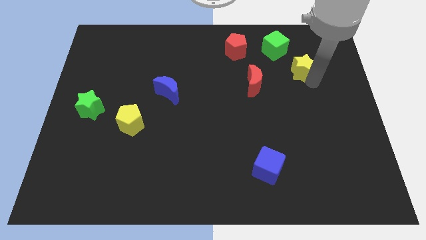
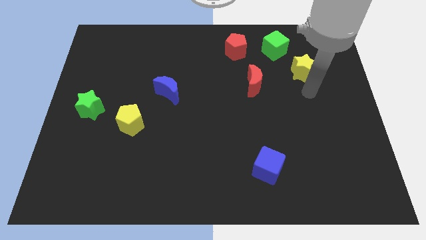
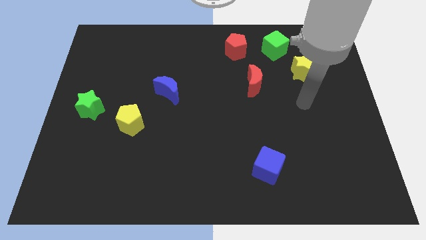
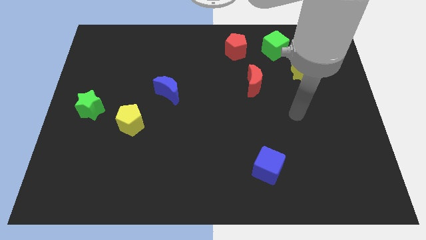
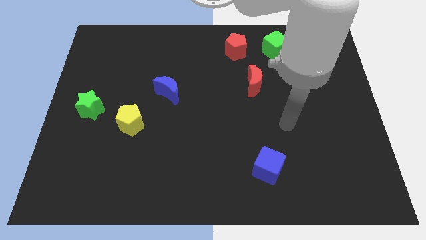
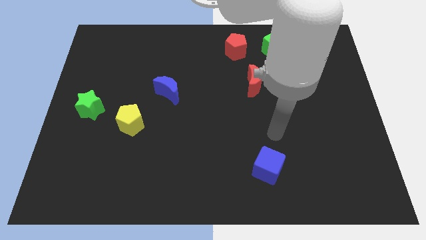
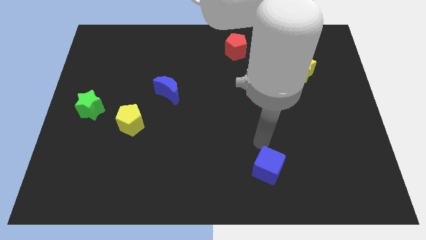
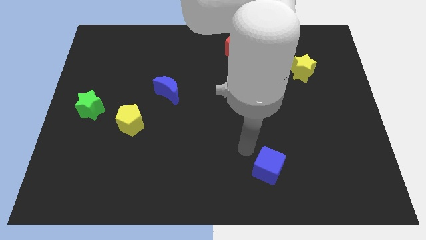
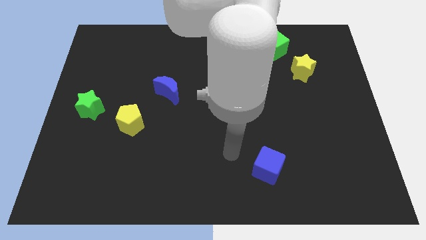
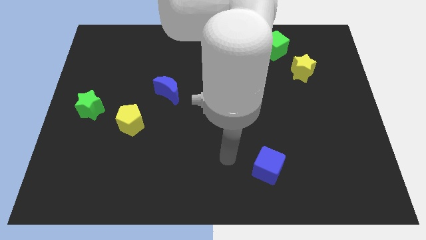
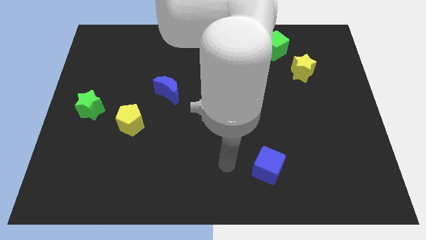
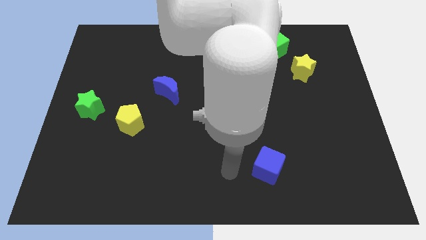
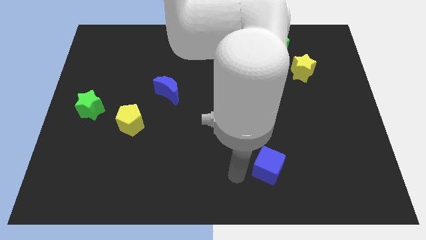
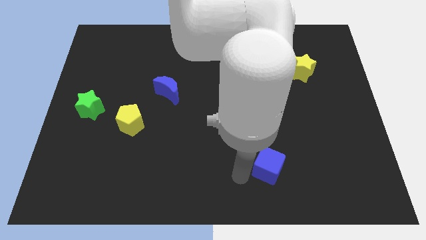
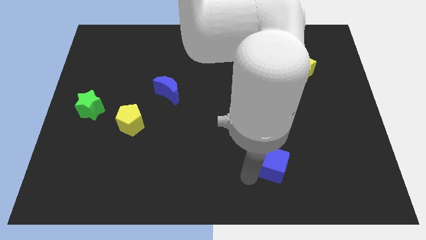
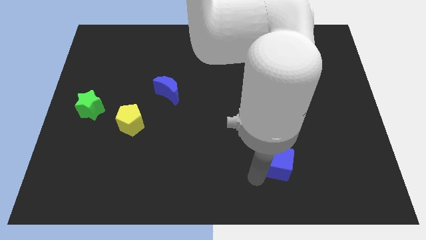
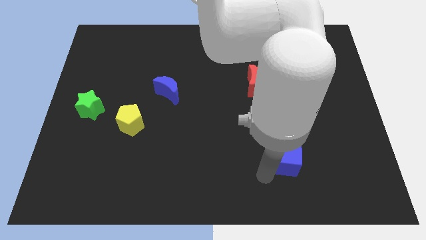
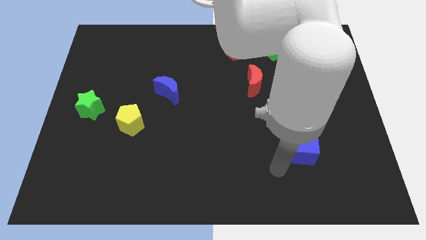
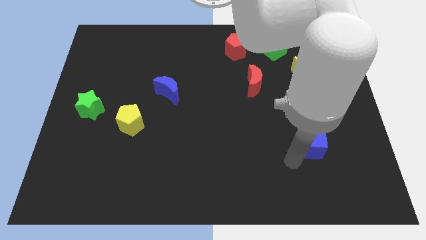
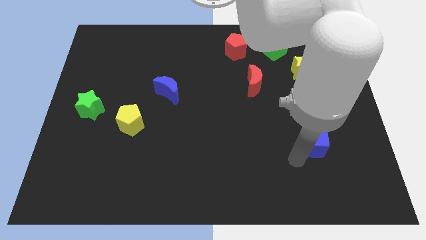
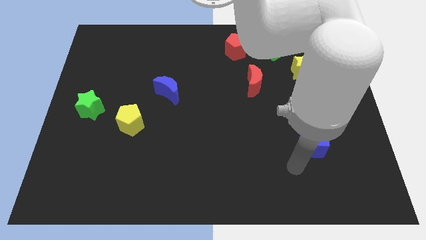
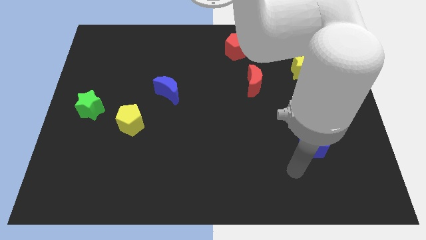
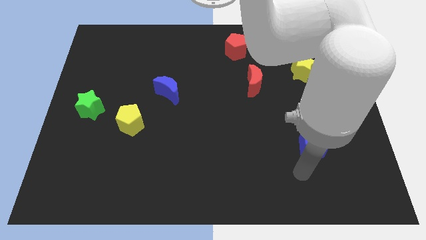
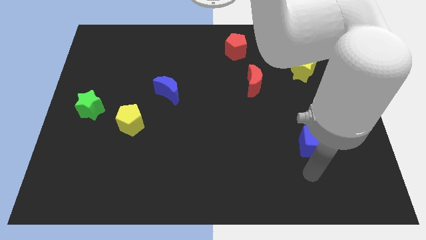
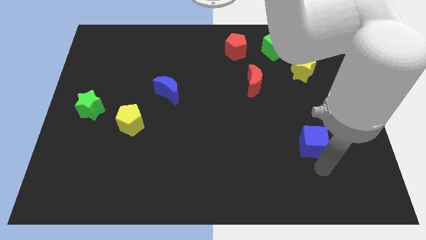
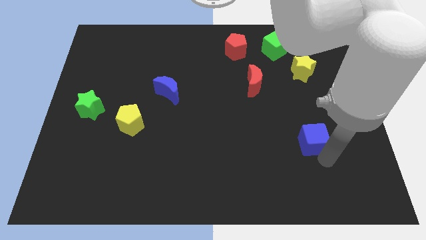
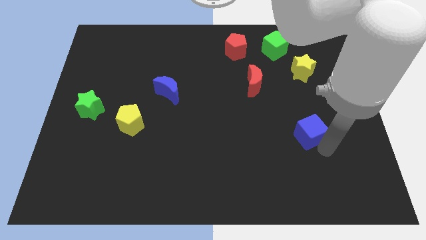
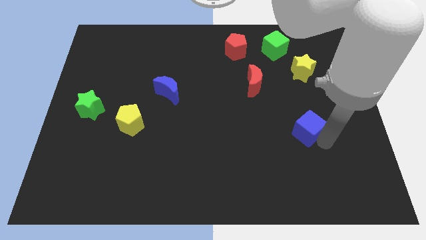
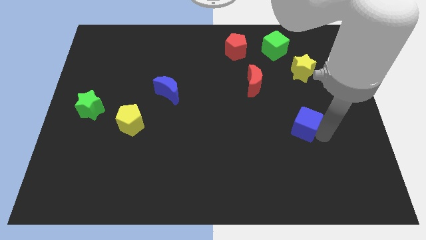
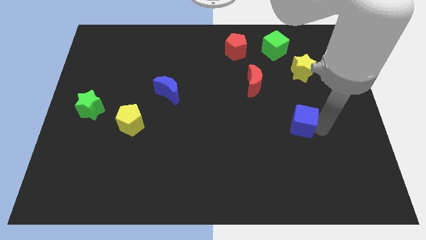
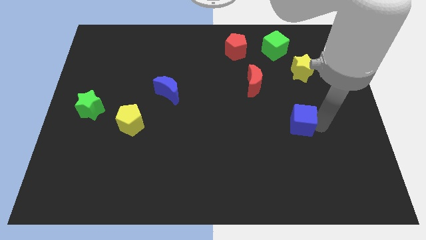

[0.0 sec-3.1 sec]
move the blue cube to the bottom of the yellow star

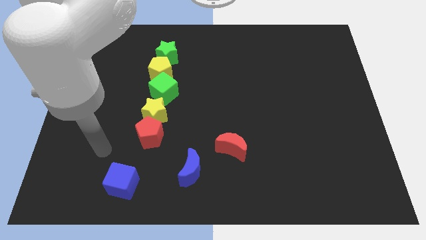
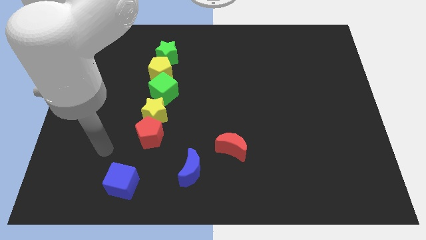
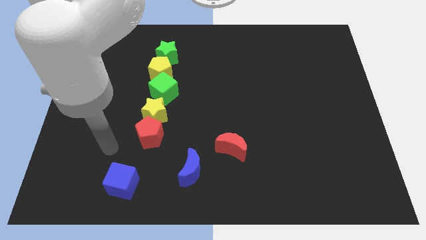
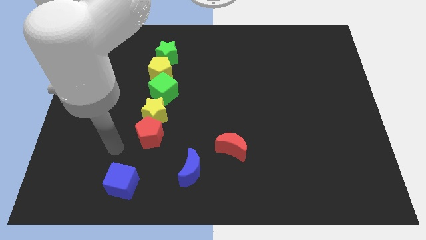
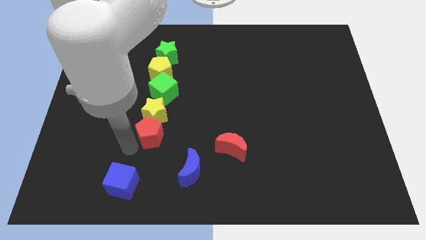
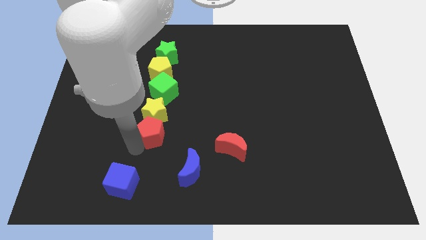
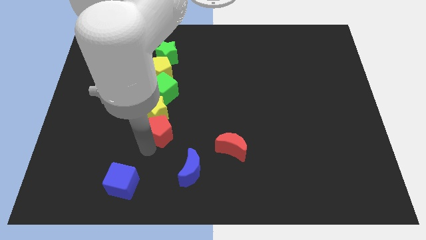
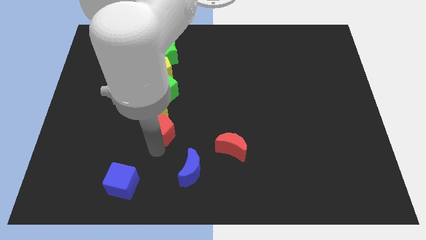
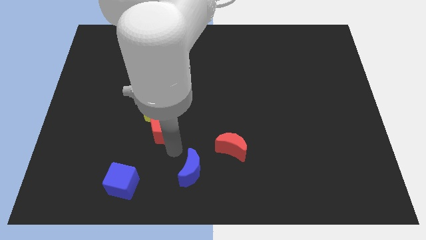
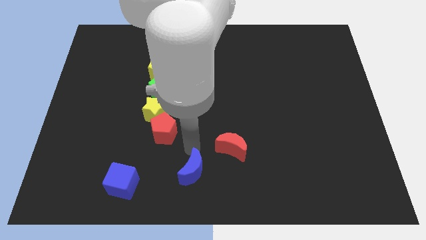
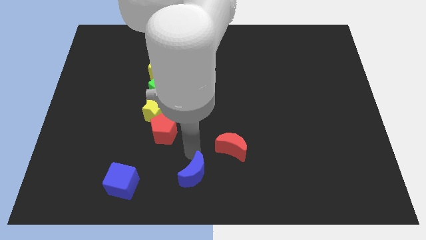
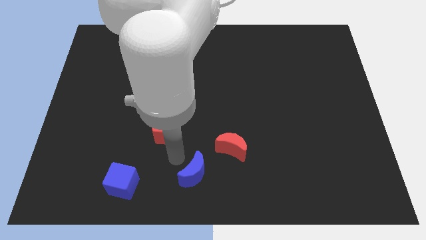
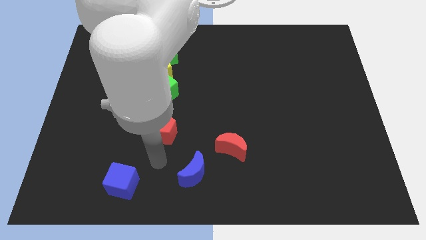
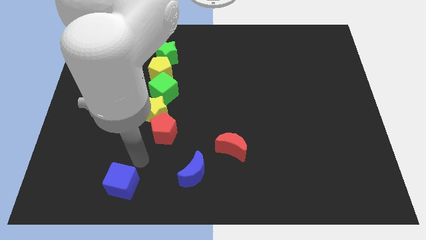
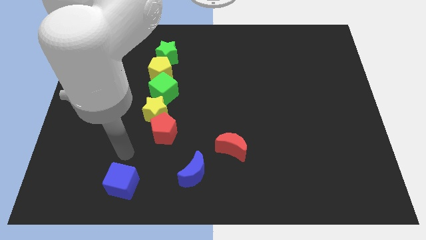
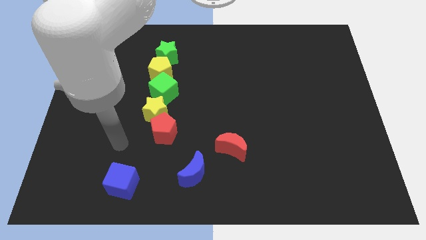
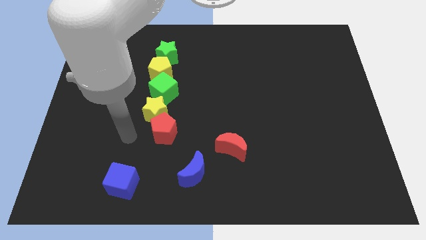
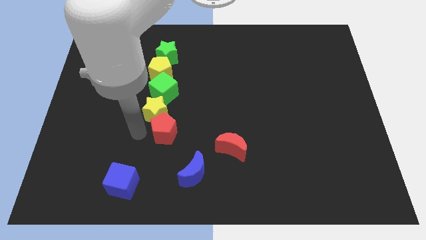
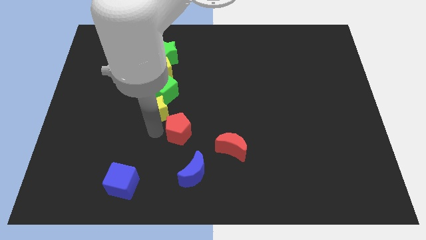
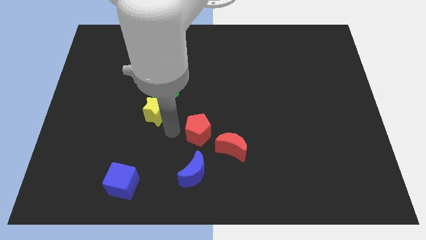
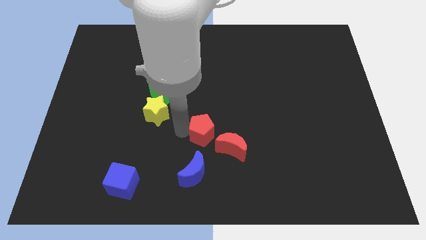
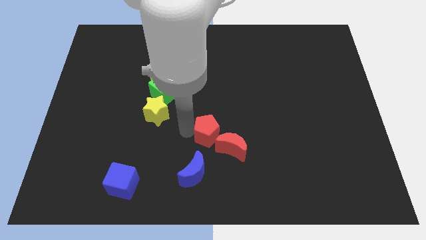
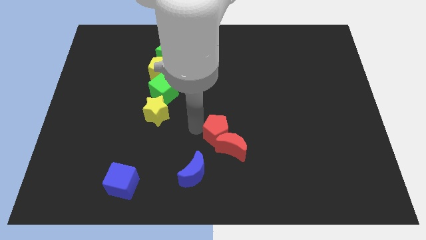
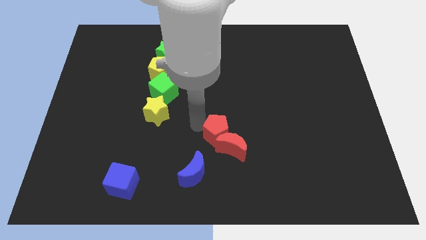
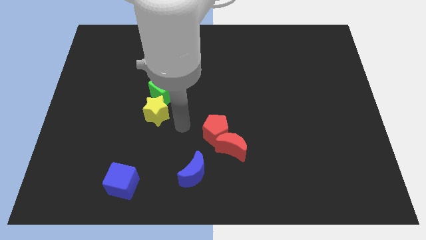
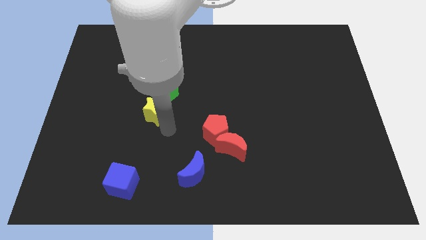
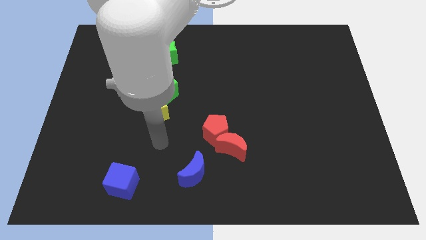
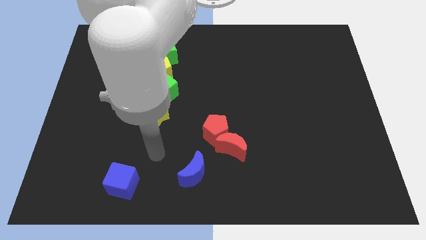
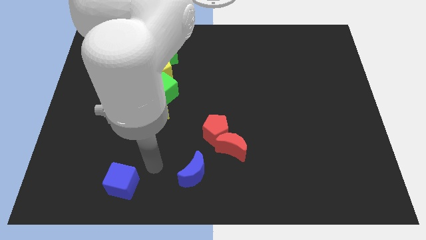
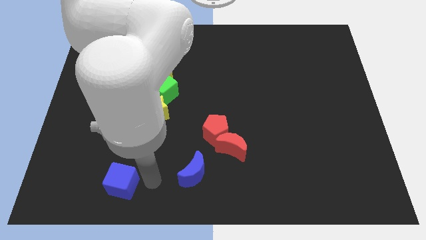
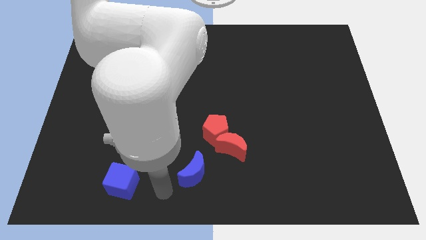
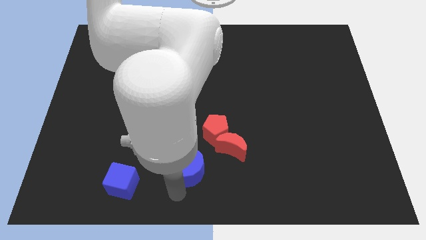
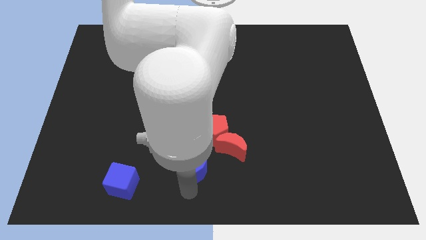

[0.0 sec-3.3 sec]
place the red pentagon above the red crescent

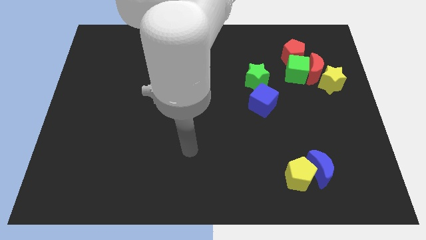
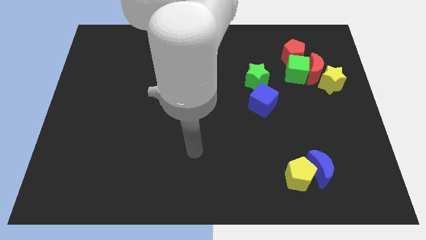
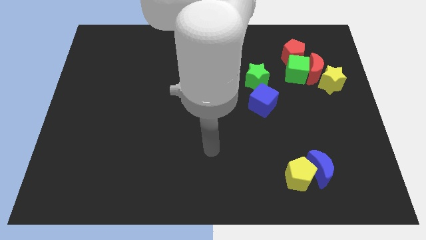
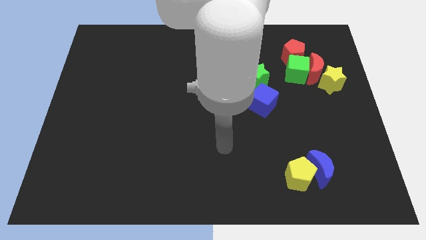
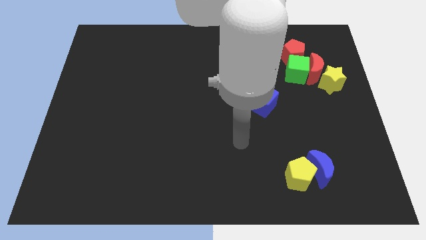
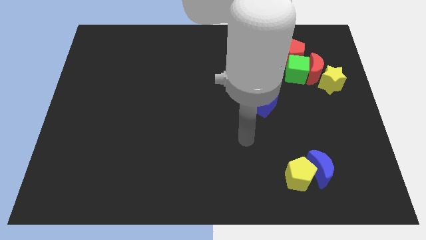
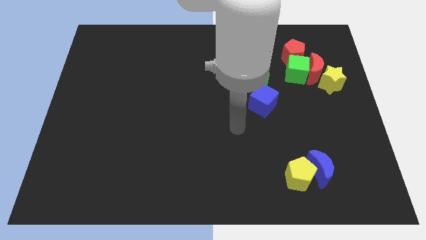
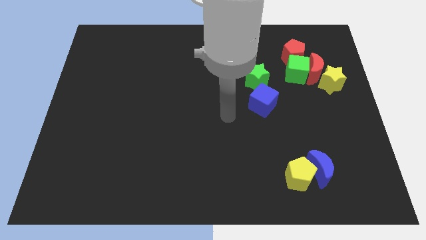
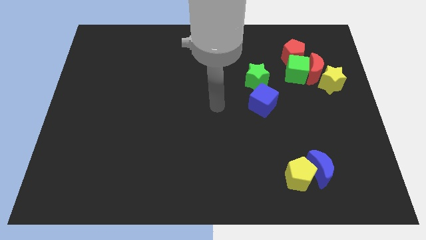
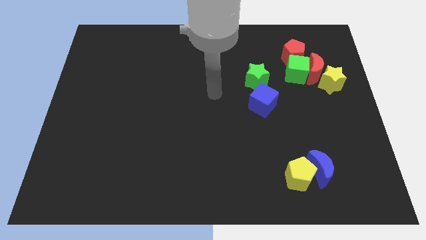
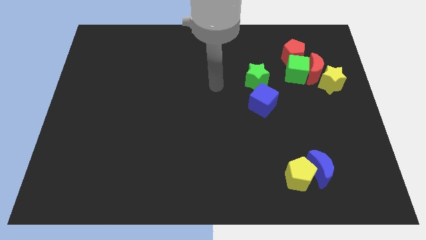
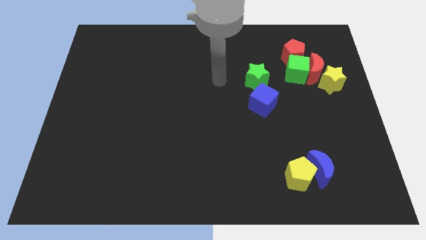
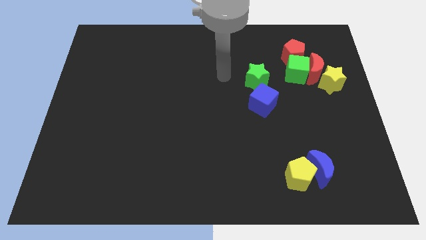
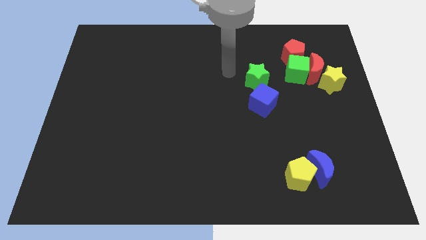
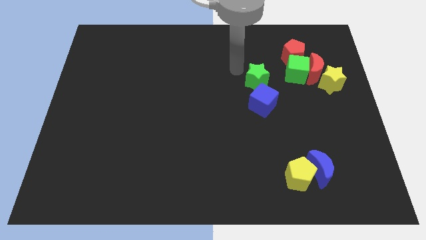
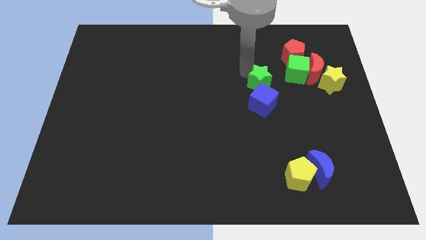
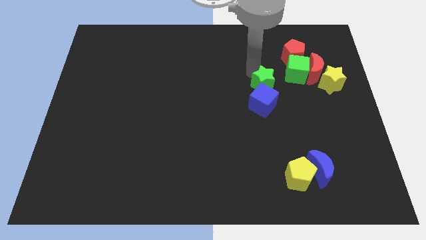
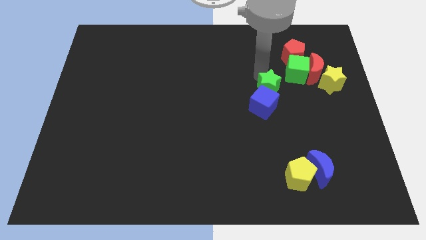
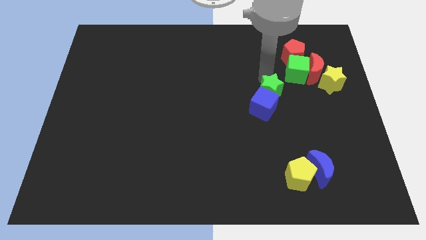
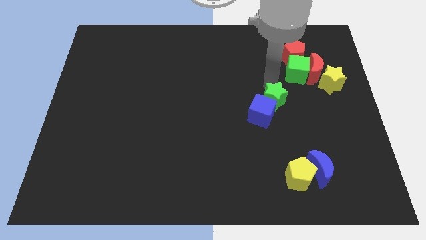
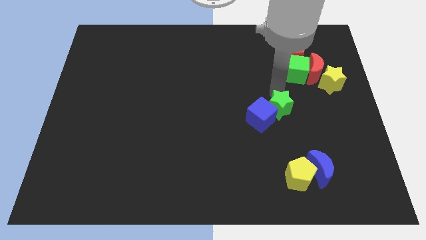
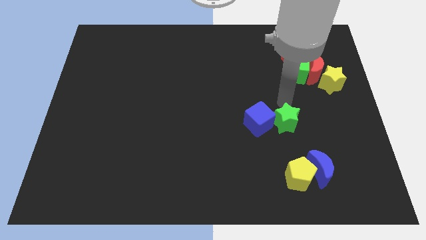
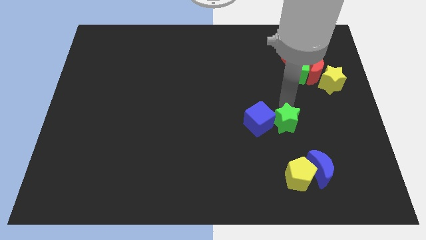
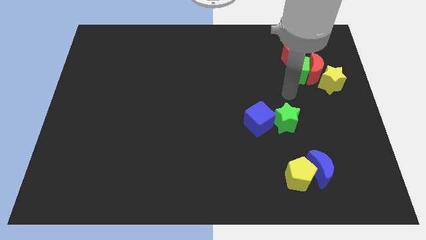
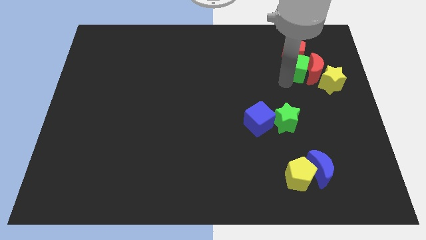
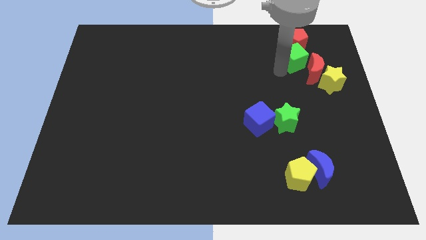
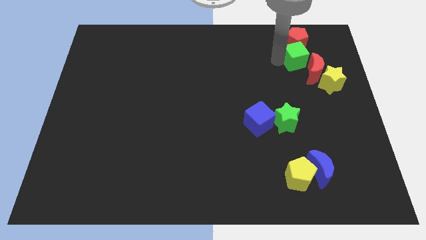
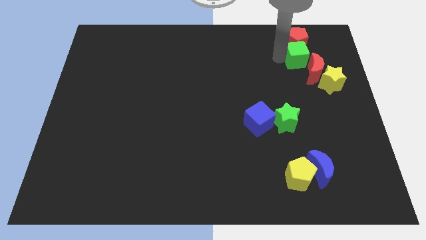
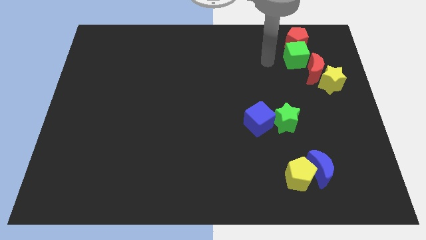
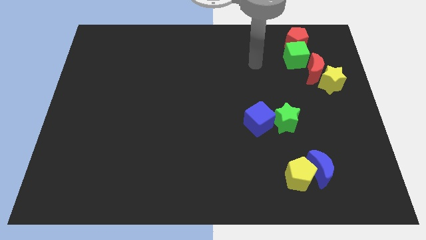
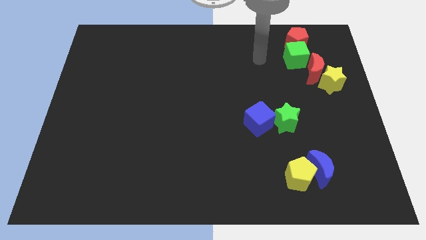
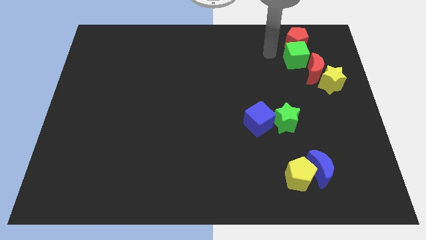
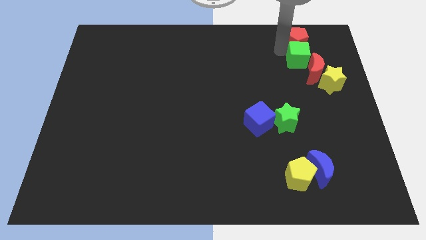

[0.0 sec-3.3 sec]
place green star adjacent to blue cube
